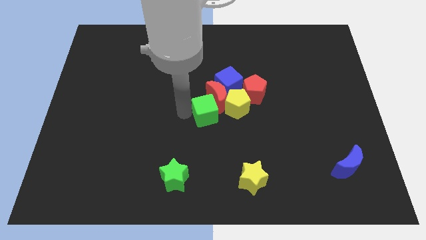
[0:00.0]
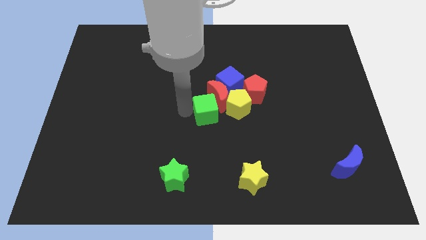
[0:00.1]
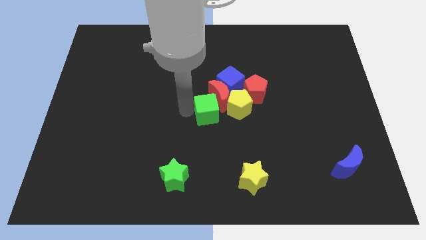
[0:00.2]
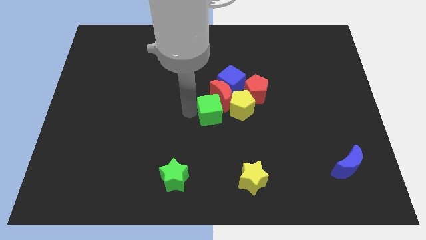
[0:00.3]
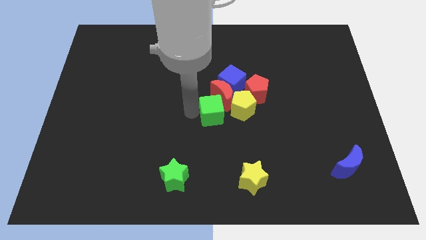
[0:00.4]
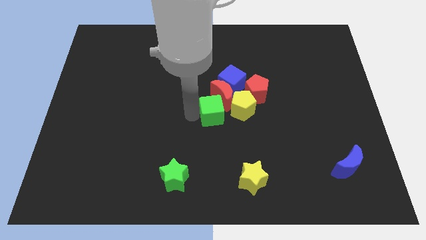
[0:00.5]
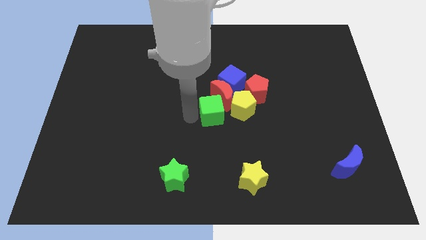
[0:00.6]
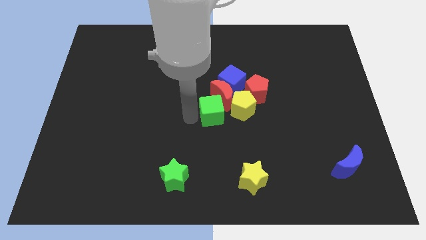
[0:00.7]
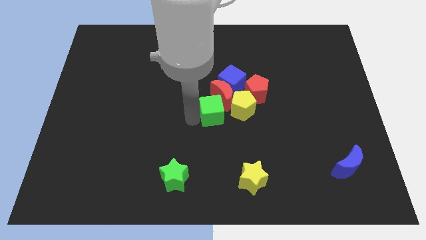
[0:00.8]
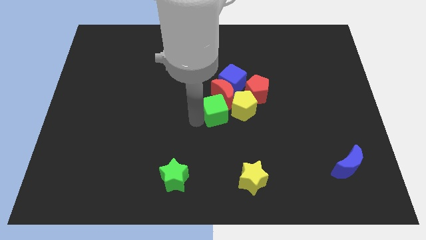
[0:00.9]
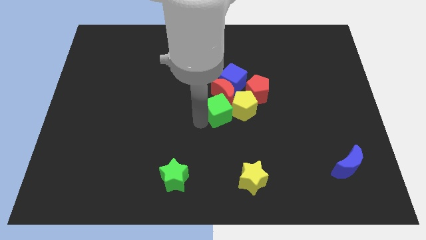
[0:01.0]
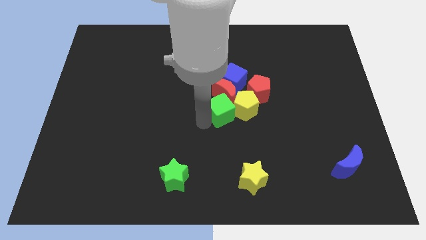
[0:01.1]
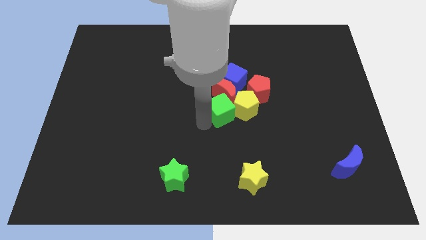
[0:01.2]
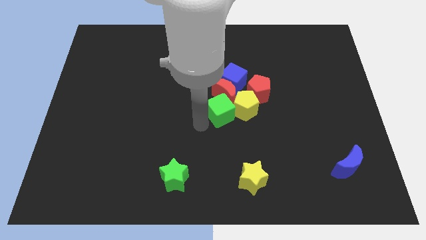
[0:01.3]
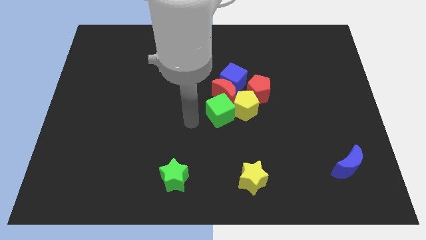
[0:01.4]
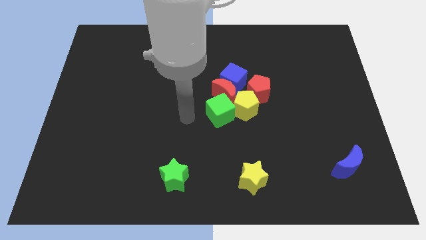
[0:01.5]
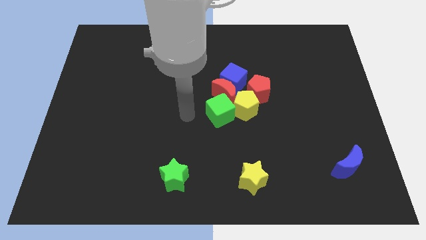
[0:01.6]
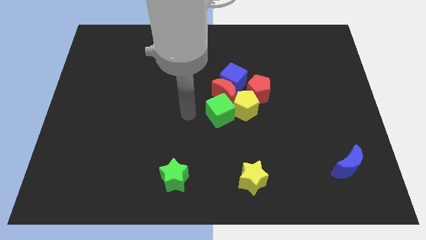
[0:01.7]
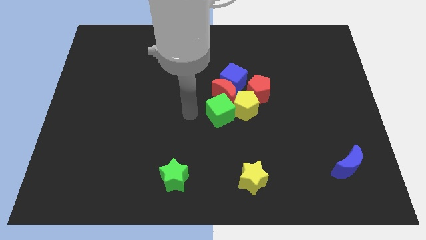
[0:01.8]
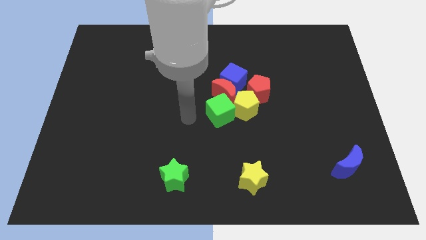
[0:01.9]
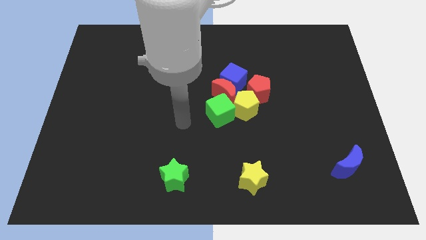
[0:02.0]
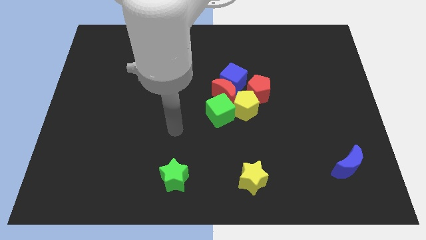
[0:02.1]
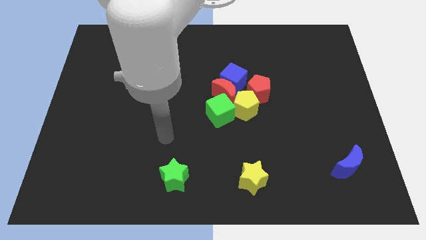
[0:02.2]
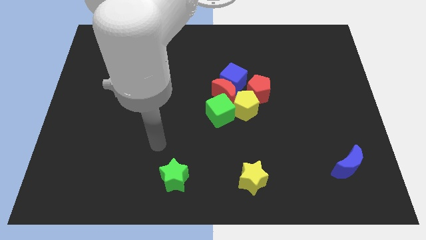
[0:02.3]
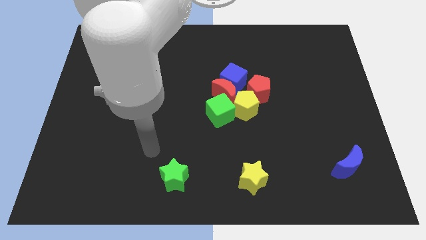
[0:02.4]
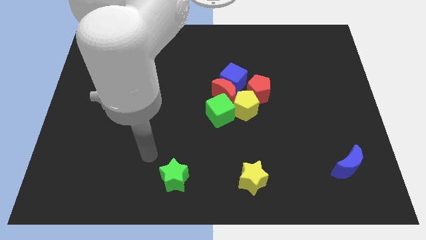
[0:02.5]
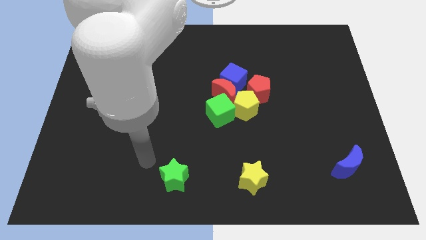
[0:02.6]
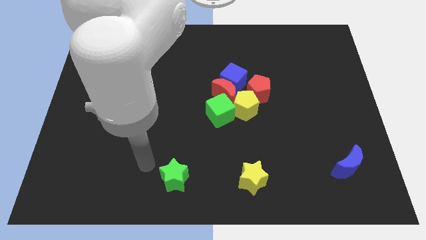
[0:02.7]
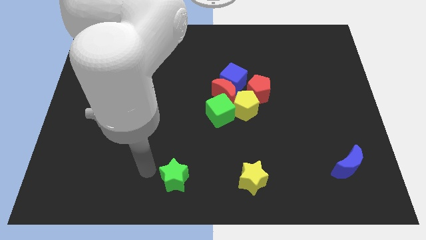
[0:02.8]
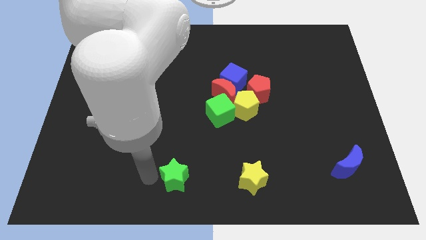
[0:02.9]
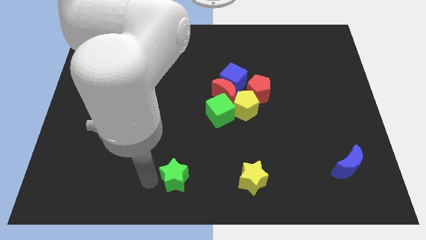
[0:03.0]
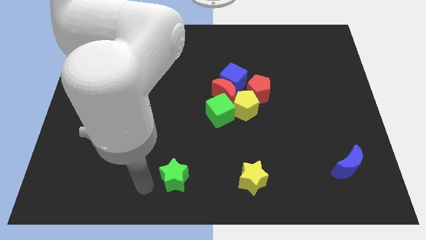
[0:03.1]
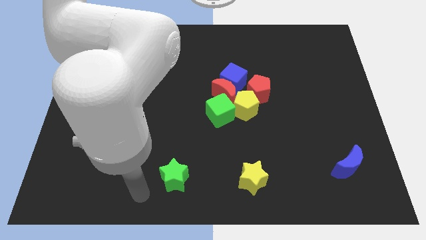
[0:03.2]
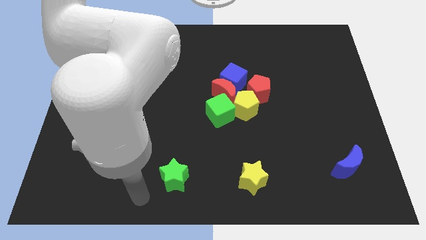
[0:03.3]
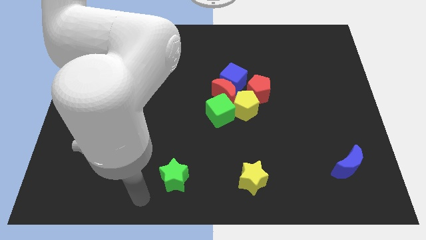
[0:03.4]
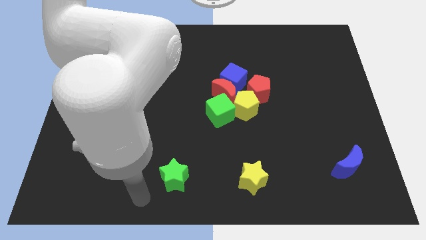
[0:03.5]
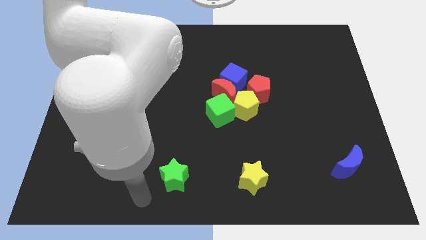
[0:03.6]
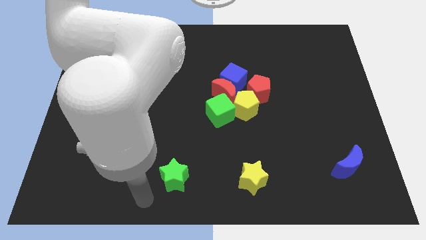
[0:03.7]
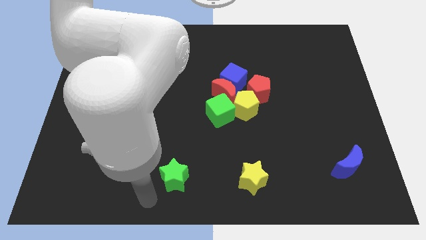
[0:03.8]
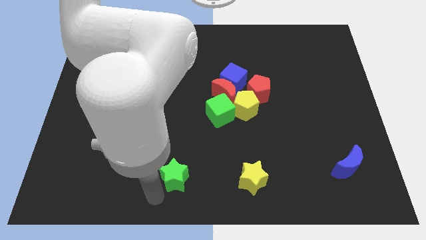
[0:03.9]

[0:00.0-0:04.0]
push the green cube into group of blocks

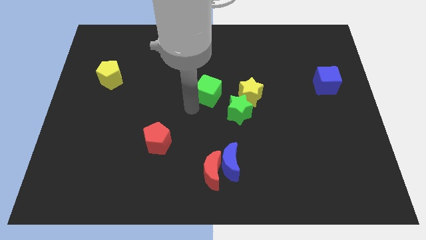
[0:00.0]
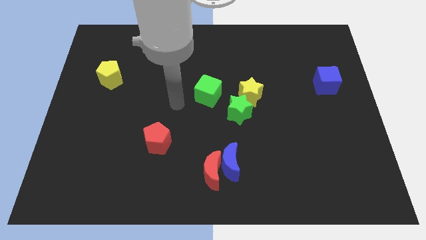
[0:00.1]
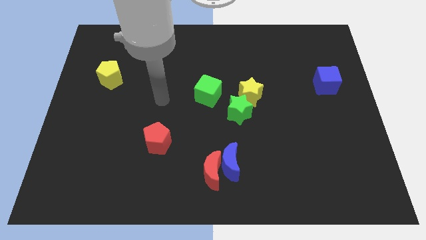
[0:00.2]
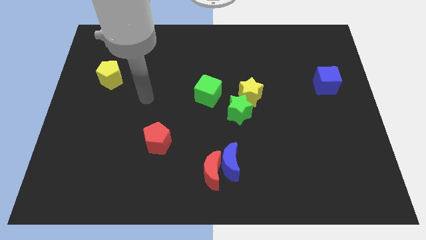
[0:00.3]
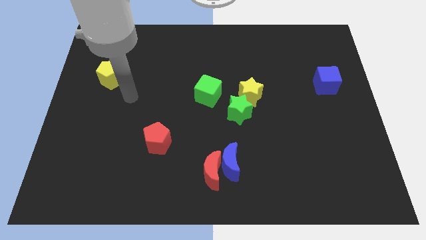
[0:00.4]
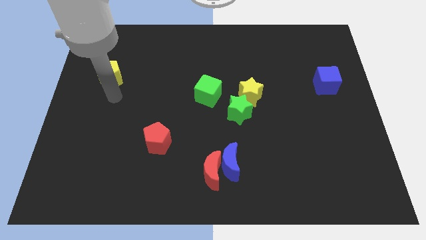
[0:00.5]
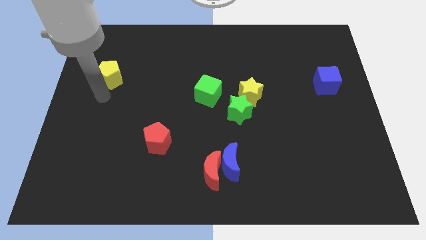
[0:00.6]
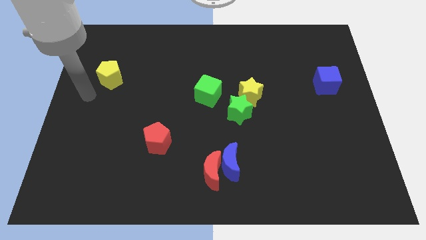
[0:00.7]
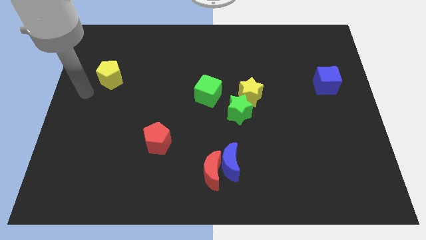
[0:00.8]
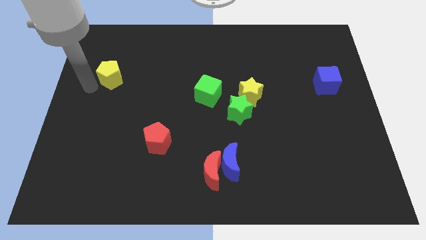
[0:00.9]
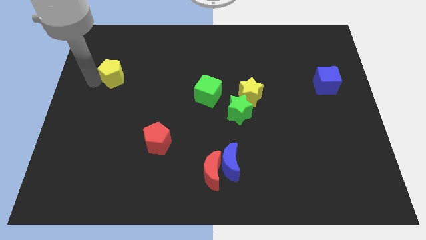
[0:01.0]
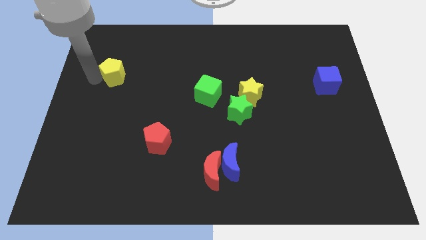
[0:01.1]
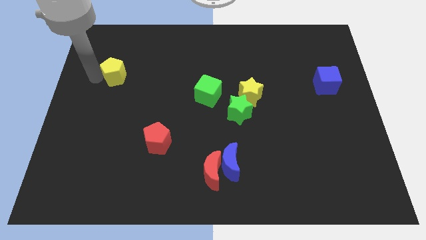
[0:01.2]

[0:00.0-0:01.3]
move your hand to the left of the yellow pentagon

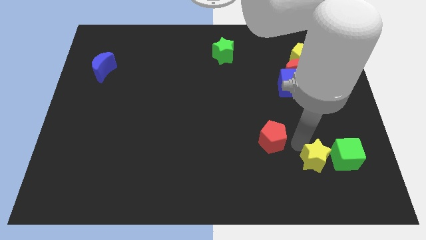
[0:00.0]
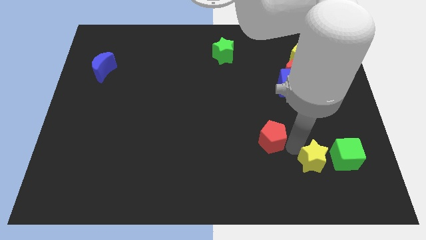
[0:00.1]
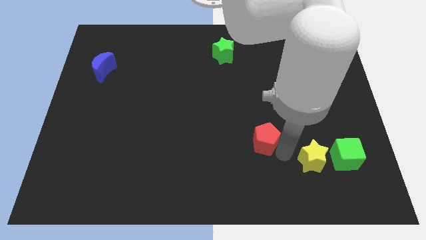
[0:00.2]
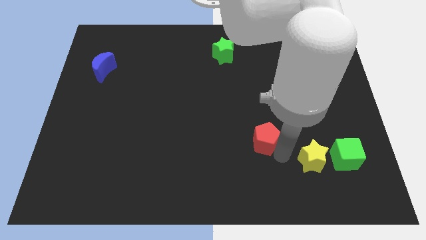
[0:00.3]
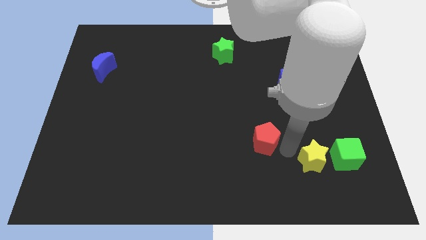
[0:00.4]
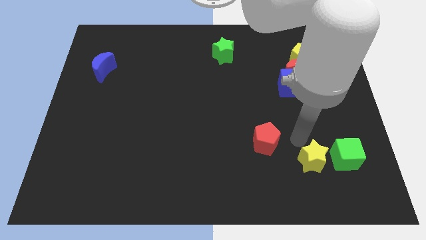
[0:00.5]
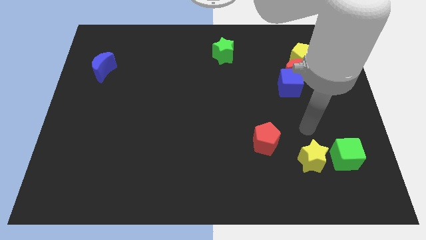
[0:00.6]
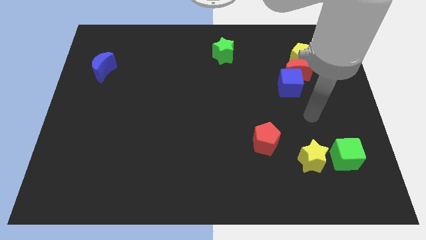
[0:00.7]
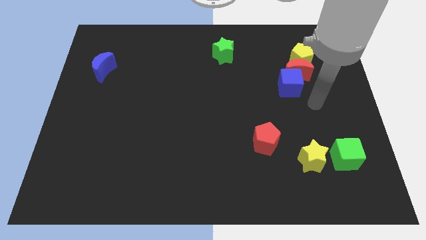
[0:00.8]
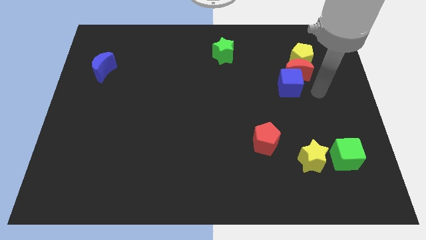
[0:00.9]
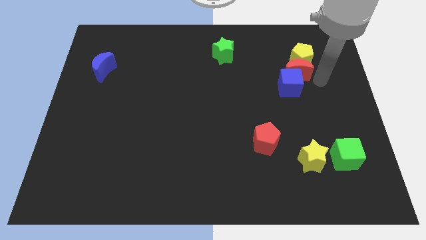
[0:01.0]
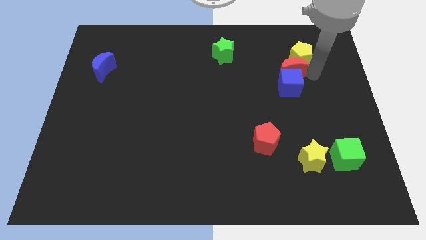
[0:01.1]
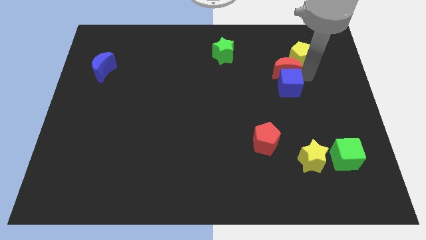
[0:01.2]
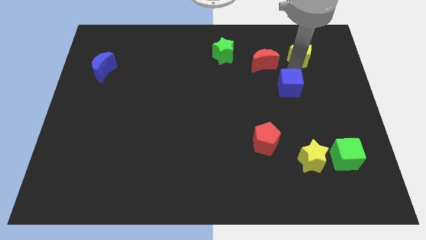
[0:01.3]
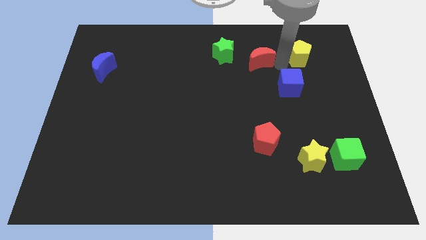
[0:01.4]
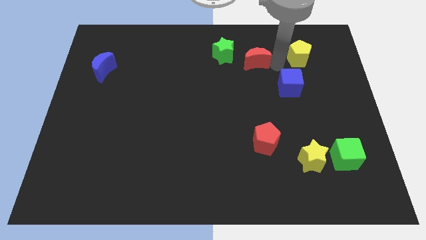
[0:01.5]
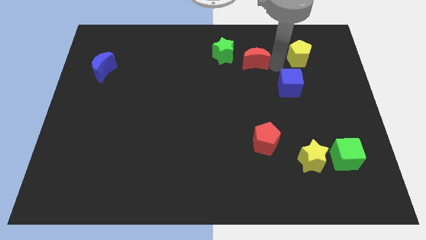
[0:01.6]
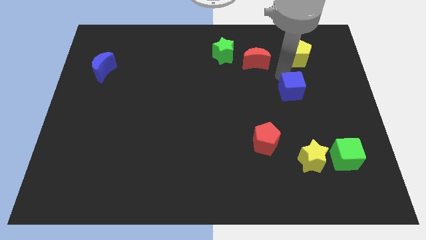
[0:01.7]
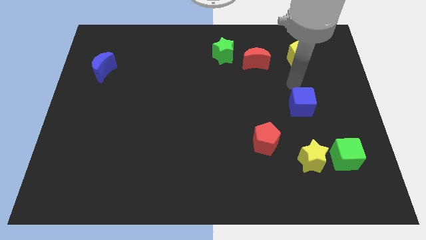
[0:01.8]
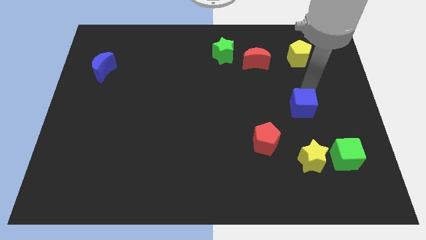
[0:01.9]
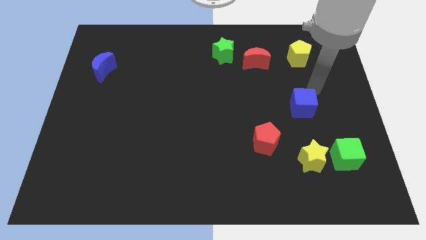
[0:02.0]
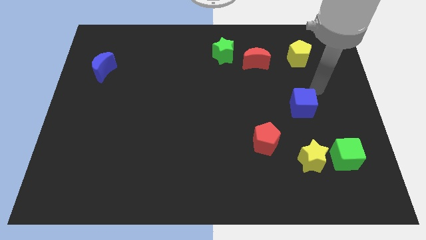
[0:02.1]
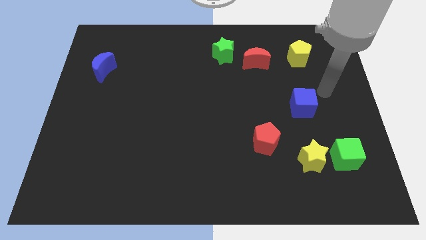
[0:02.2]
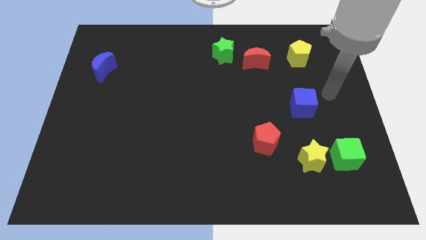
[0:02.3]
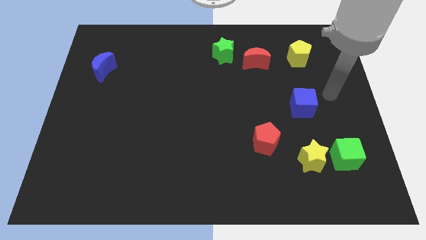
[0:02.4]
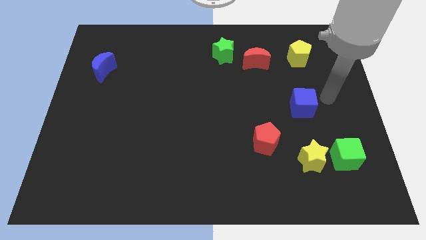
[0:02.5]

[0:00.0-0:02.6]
separate the red crescent and the blue cube from the diagonal line of blocks

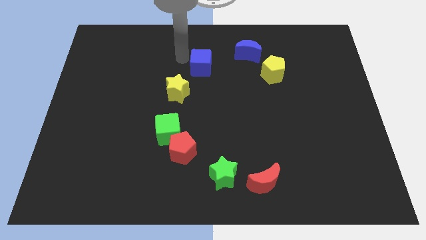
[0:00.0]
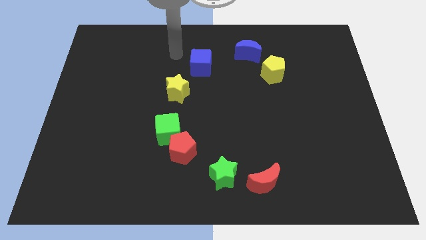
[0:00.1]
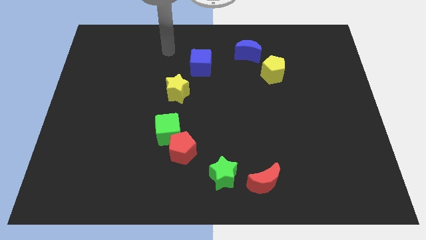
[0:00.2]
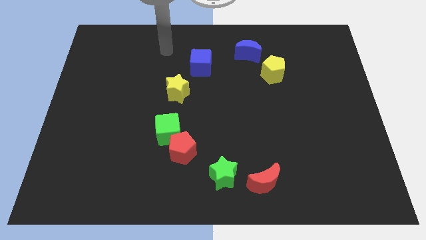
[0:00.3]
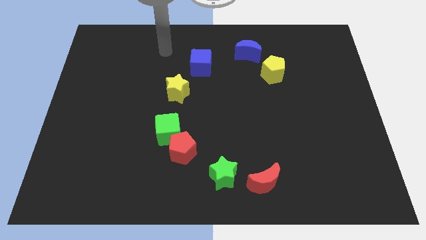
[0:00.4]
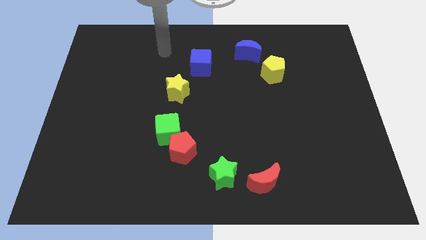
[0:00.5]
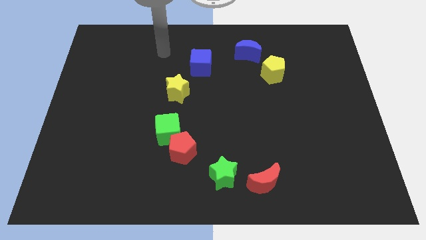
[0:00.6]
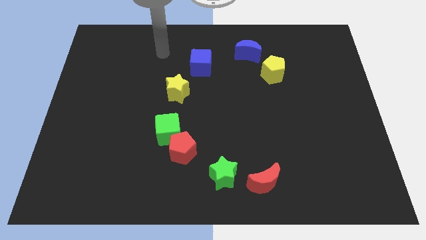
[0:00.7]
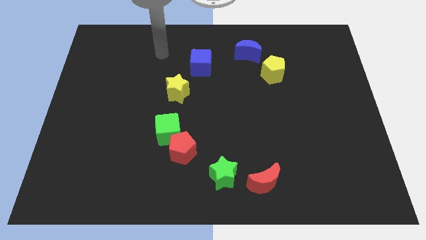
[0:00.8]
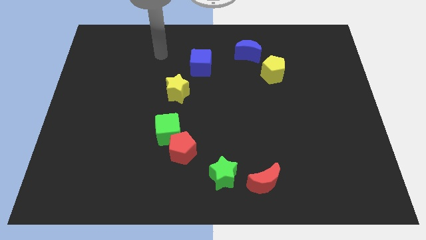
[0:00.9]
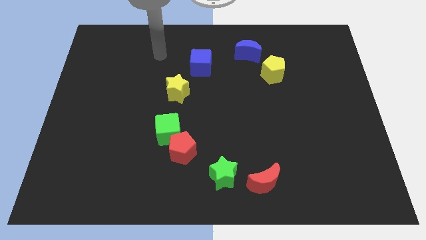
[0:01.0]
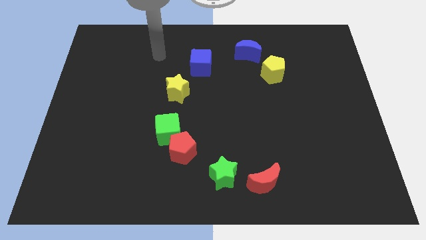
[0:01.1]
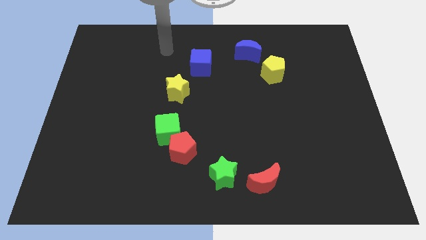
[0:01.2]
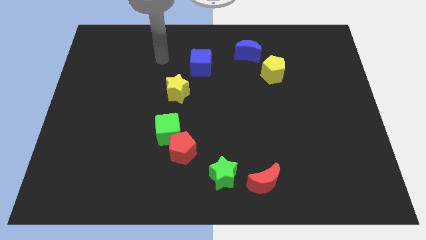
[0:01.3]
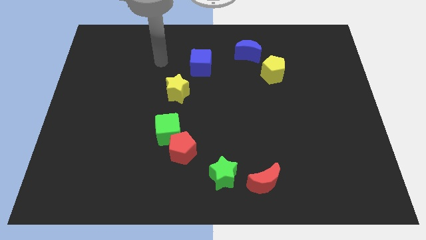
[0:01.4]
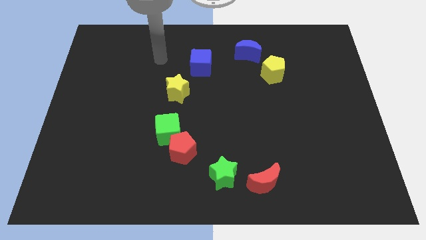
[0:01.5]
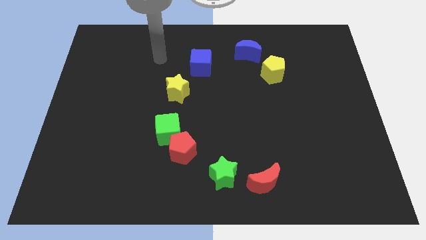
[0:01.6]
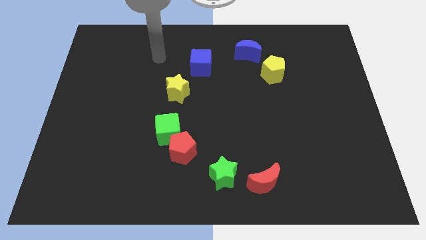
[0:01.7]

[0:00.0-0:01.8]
move arm away from the blue cube
